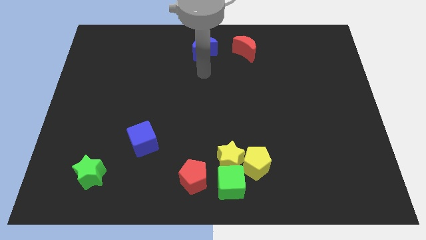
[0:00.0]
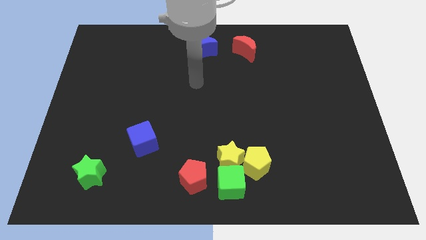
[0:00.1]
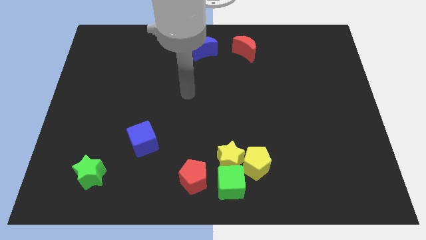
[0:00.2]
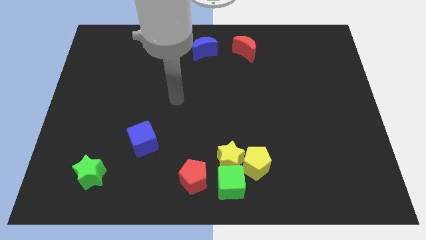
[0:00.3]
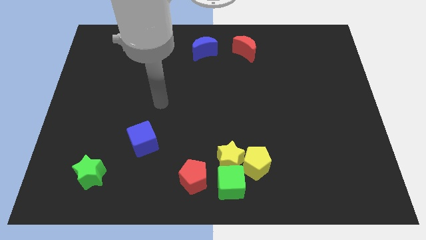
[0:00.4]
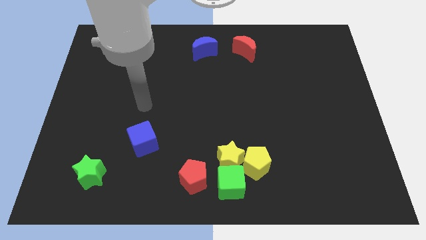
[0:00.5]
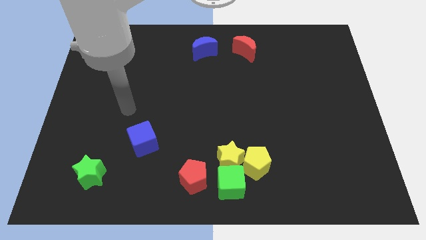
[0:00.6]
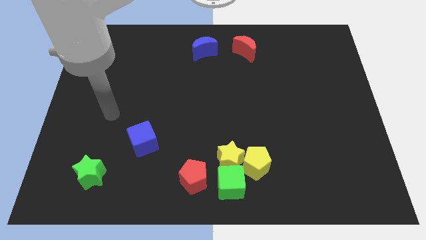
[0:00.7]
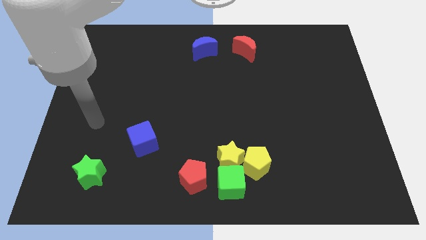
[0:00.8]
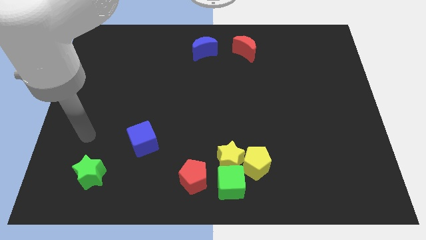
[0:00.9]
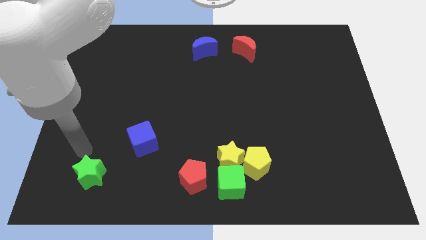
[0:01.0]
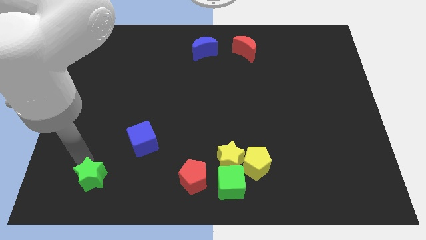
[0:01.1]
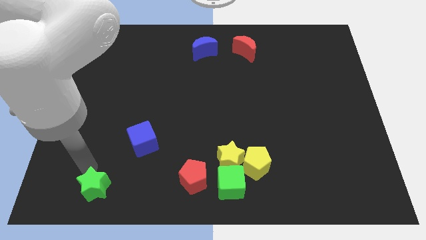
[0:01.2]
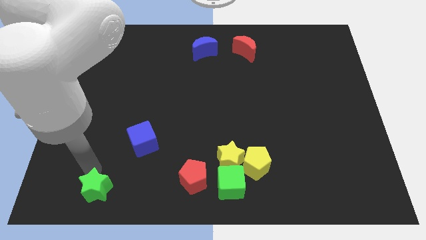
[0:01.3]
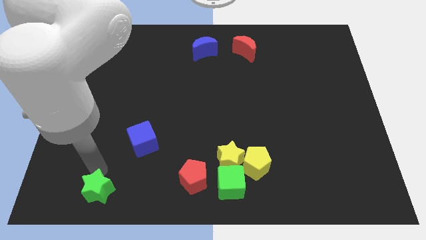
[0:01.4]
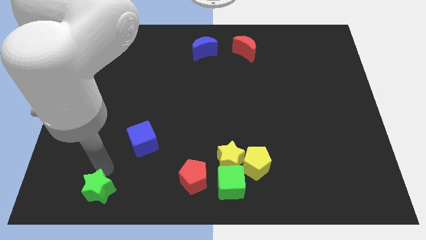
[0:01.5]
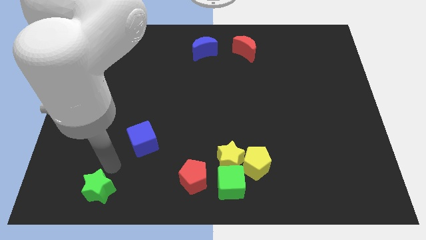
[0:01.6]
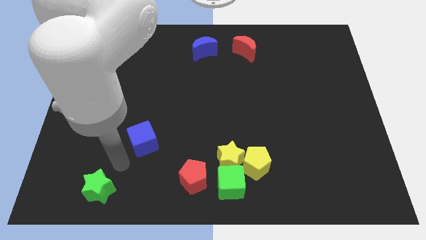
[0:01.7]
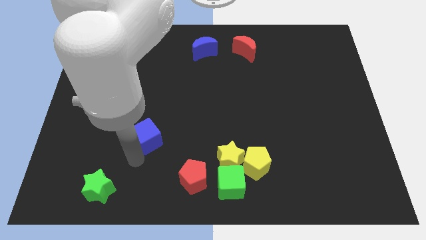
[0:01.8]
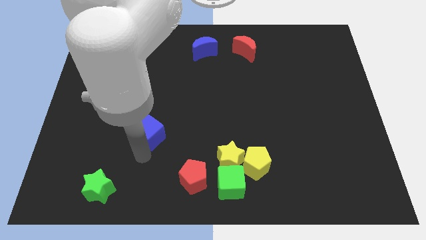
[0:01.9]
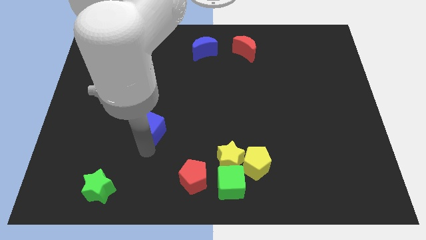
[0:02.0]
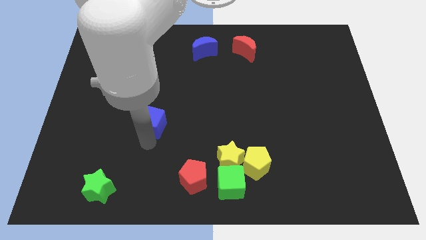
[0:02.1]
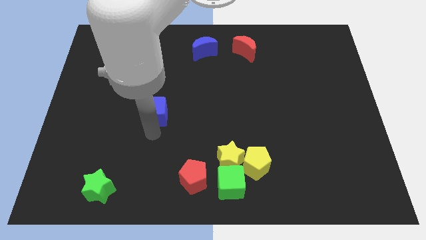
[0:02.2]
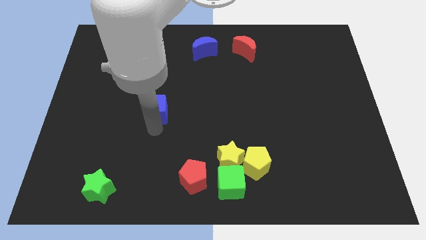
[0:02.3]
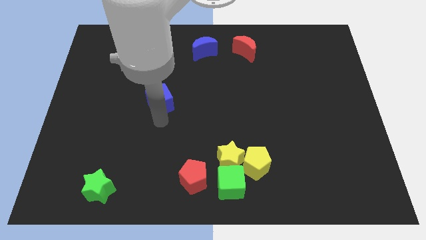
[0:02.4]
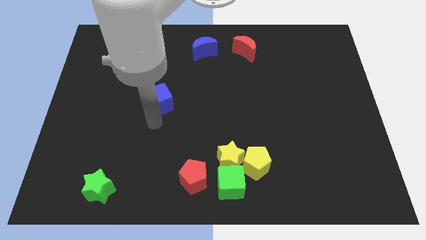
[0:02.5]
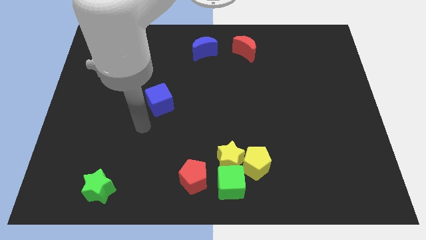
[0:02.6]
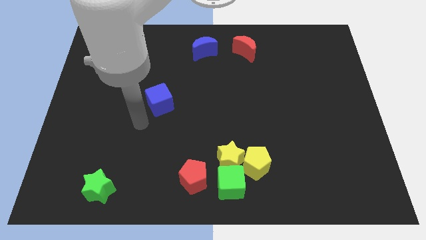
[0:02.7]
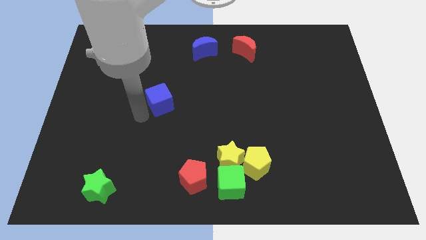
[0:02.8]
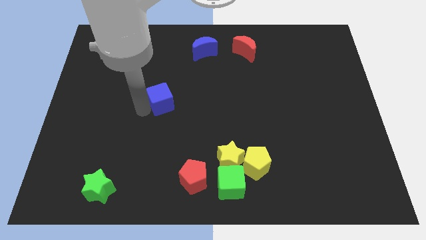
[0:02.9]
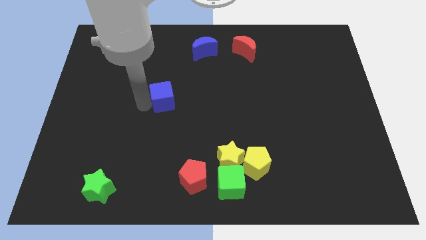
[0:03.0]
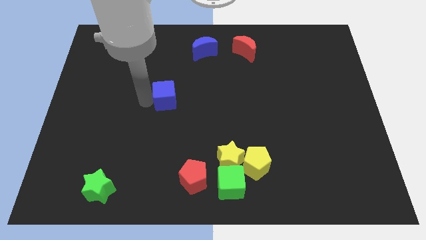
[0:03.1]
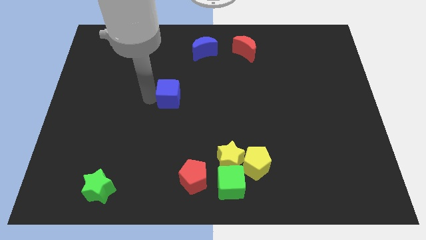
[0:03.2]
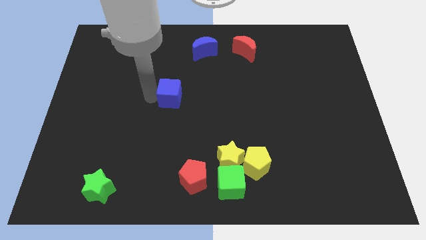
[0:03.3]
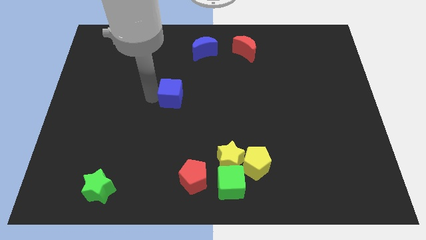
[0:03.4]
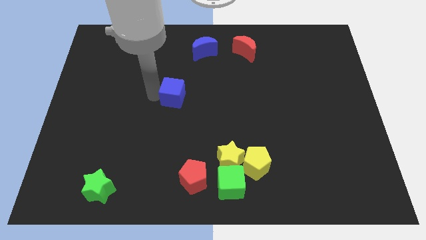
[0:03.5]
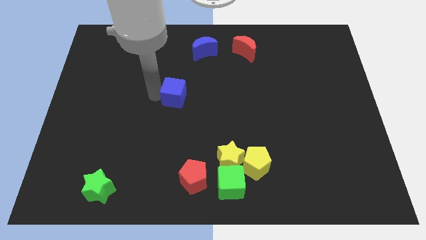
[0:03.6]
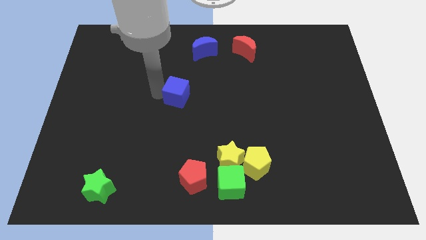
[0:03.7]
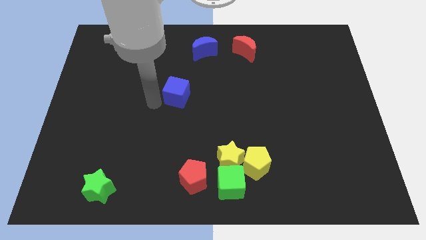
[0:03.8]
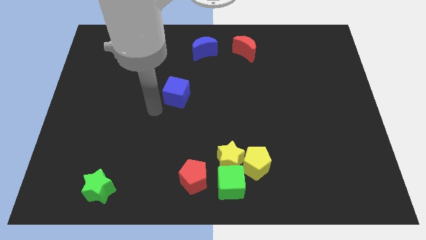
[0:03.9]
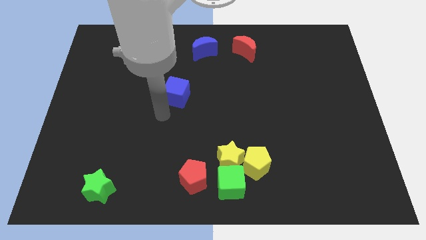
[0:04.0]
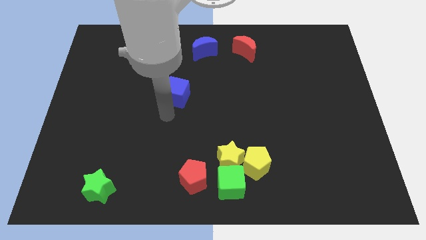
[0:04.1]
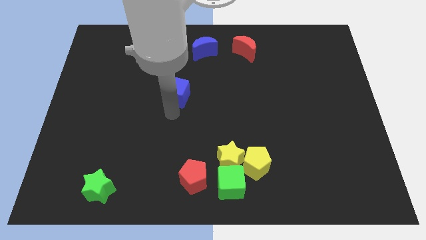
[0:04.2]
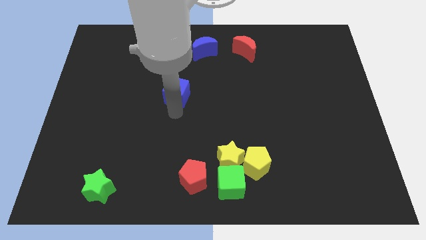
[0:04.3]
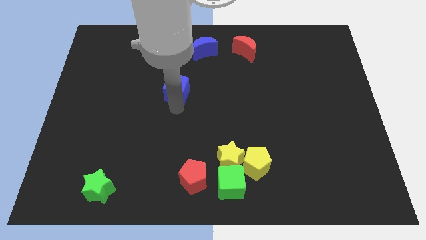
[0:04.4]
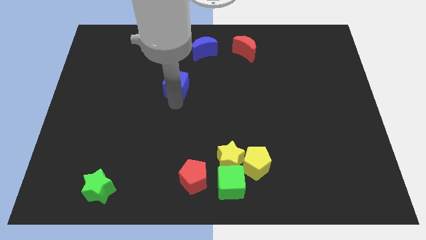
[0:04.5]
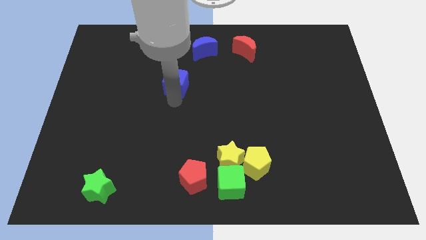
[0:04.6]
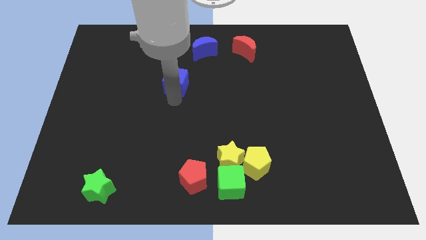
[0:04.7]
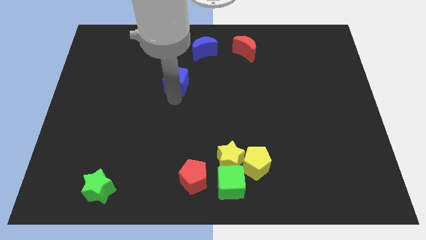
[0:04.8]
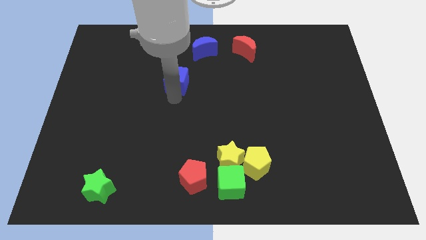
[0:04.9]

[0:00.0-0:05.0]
place the blue cube below the blue moon

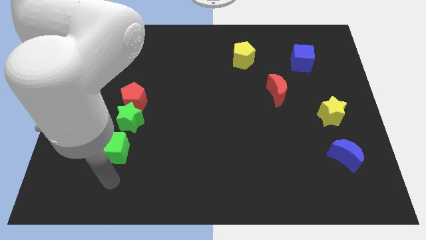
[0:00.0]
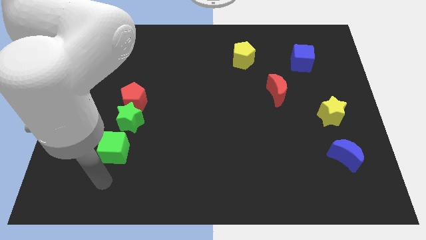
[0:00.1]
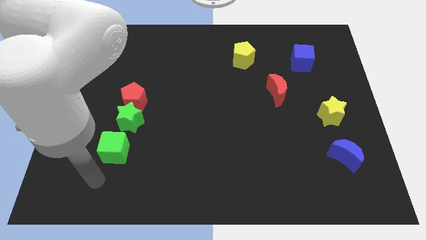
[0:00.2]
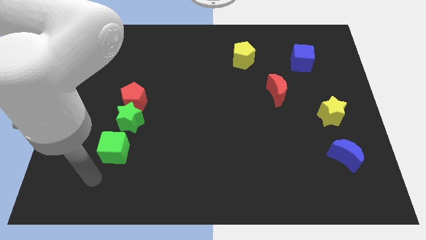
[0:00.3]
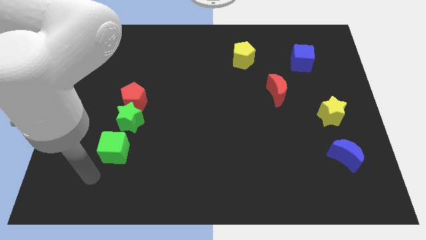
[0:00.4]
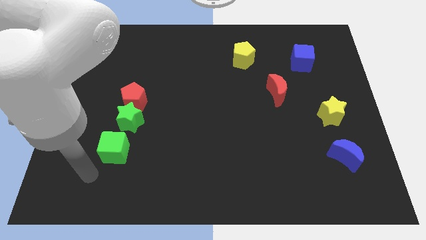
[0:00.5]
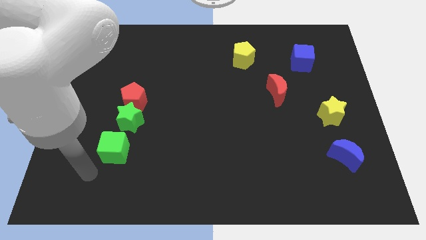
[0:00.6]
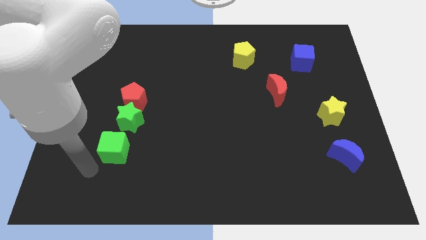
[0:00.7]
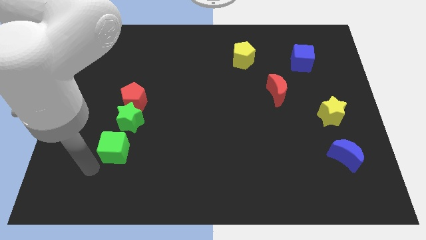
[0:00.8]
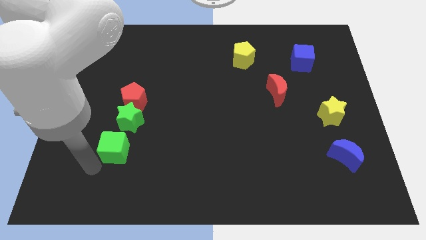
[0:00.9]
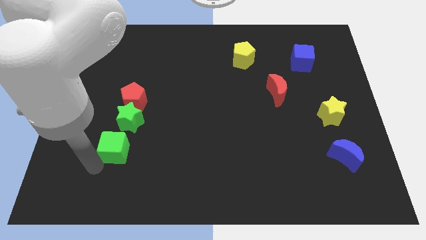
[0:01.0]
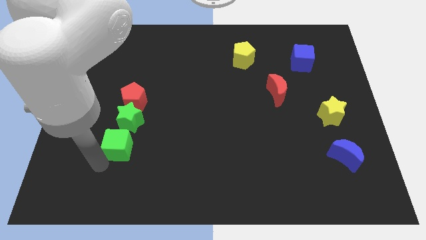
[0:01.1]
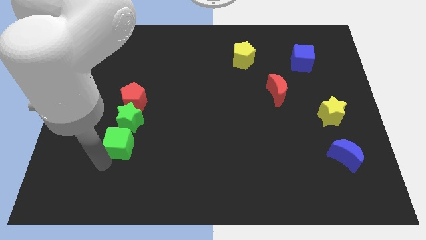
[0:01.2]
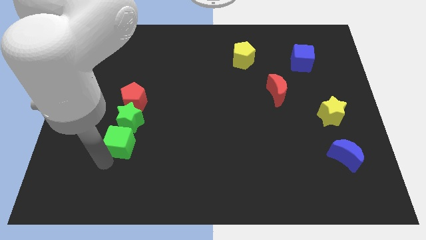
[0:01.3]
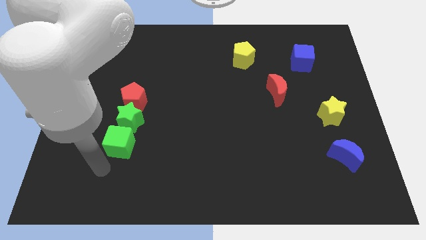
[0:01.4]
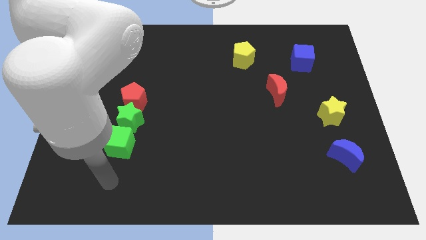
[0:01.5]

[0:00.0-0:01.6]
push the green cube to the bottom of the green star

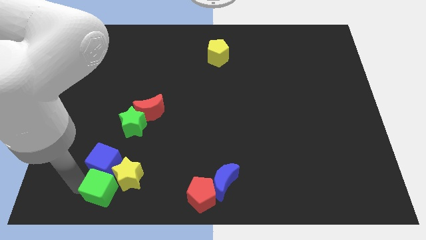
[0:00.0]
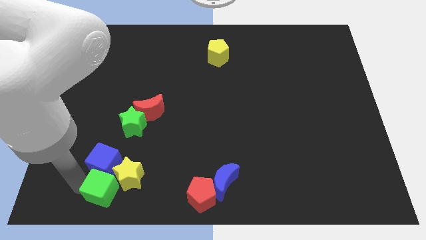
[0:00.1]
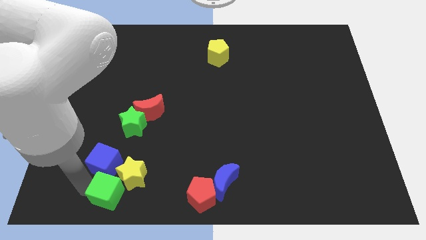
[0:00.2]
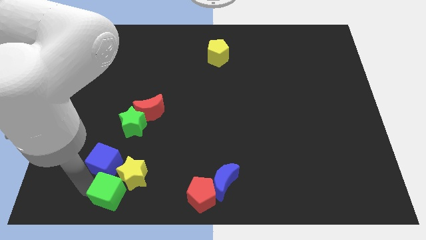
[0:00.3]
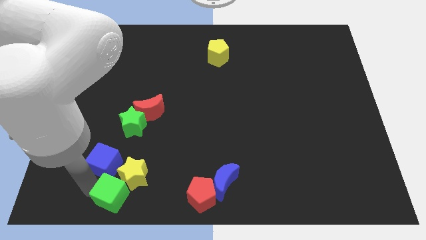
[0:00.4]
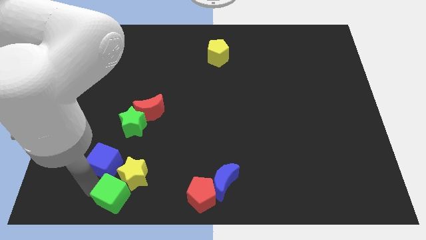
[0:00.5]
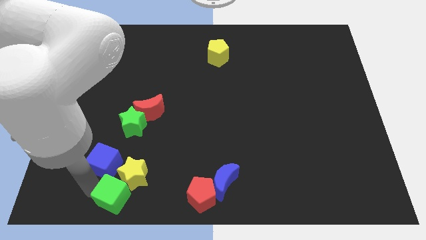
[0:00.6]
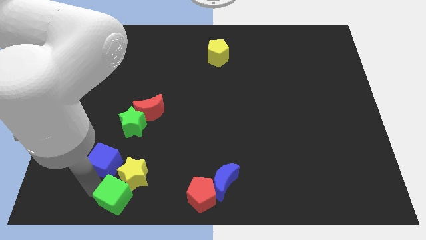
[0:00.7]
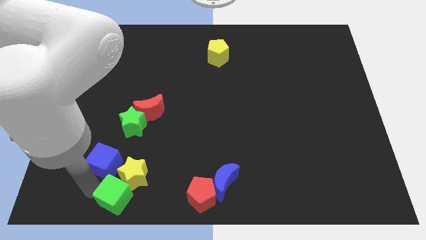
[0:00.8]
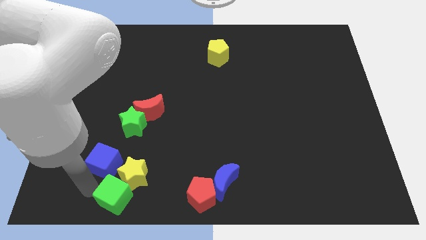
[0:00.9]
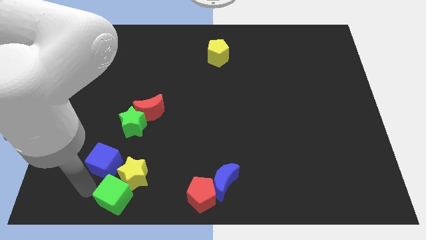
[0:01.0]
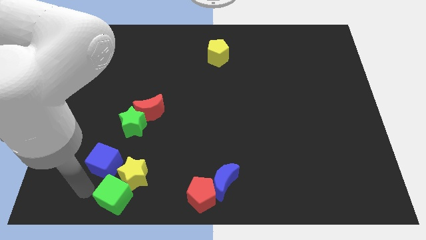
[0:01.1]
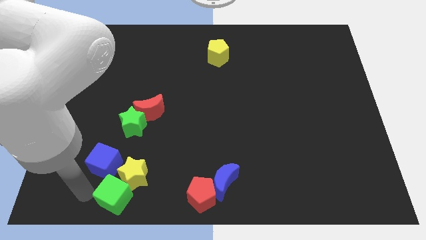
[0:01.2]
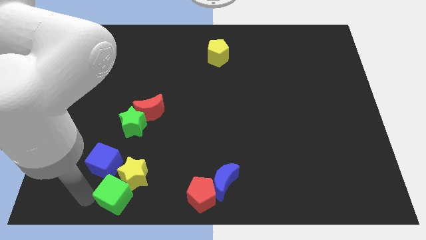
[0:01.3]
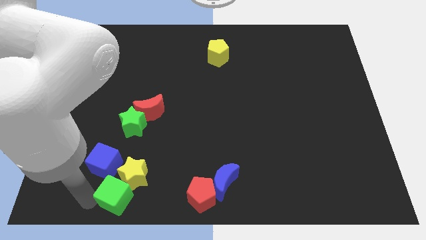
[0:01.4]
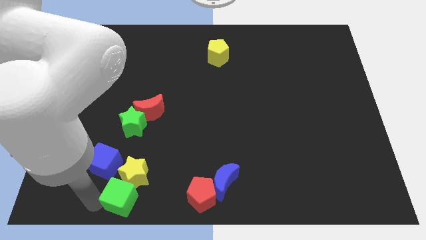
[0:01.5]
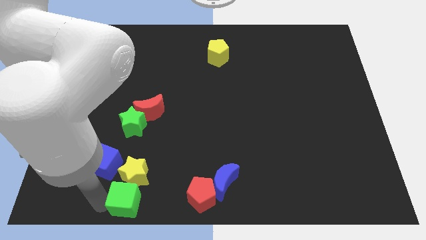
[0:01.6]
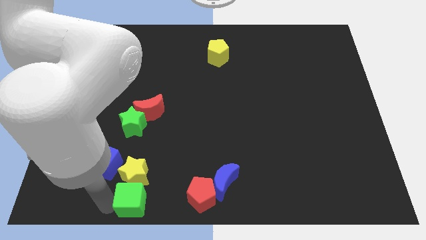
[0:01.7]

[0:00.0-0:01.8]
place the green cube below the yellow star

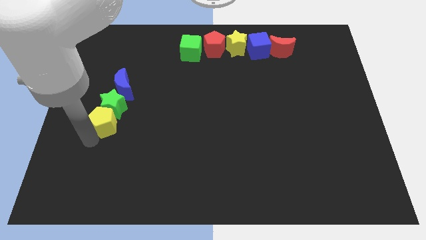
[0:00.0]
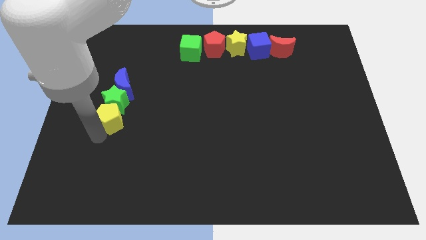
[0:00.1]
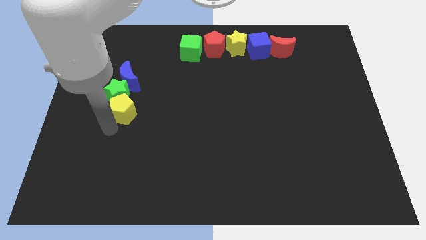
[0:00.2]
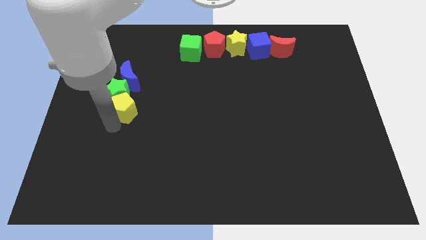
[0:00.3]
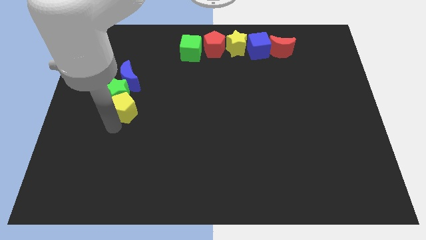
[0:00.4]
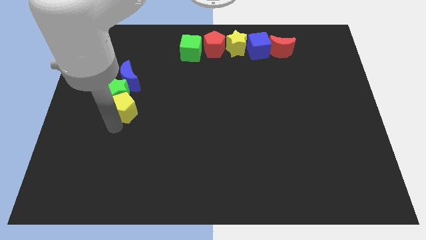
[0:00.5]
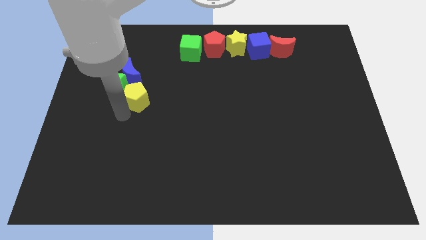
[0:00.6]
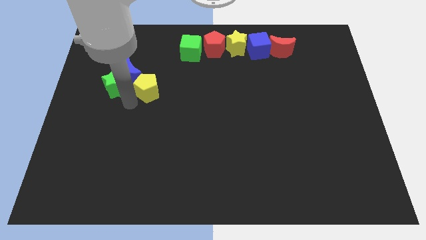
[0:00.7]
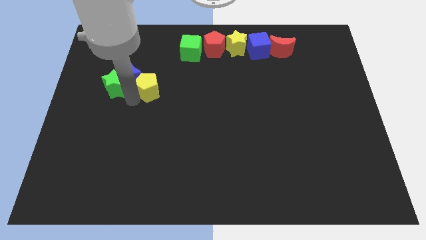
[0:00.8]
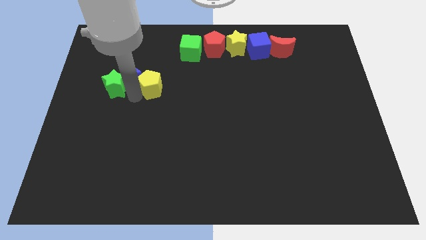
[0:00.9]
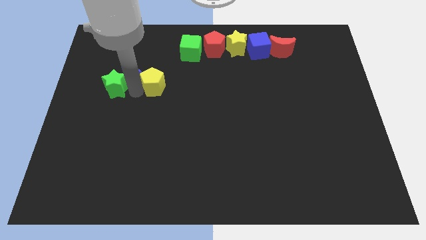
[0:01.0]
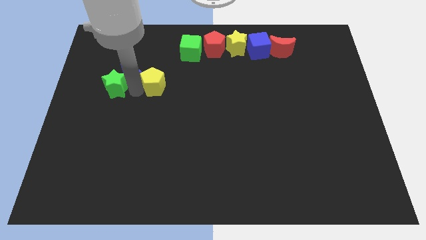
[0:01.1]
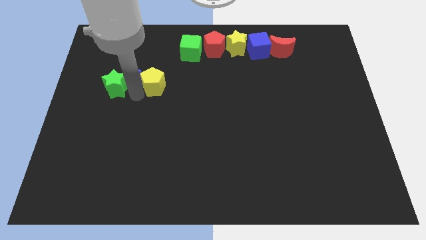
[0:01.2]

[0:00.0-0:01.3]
place yellow pentagon to the right of green star
